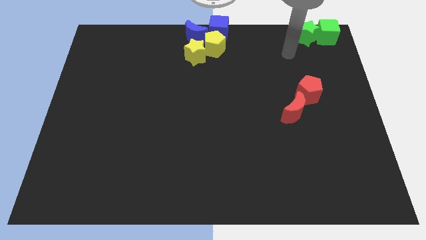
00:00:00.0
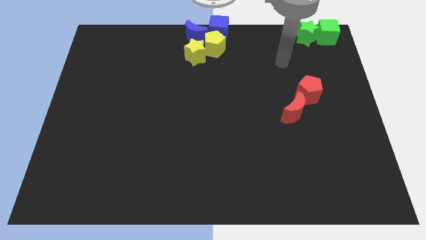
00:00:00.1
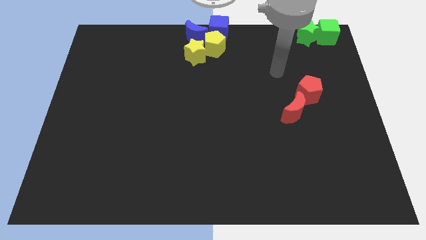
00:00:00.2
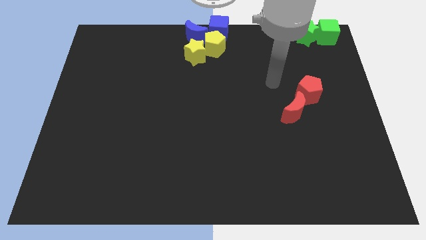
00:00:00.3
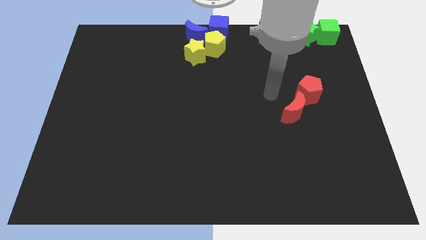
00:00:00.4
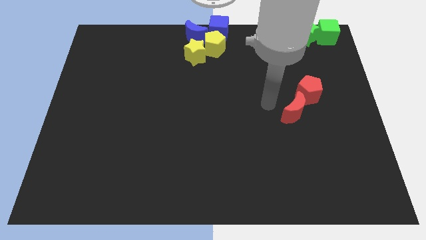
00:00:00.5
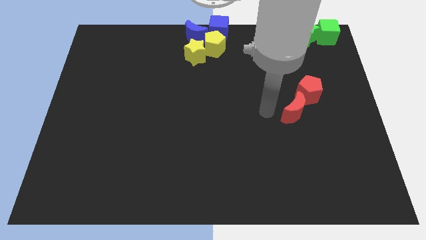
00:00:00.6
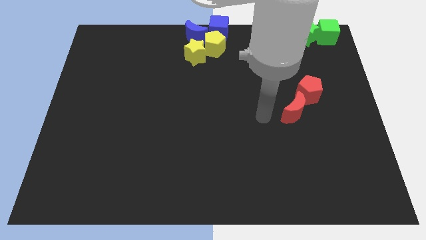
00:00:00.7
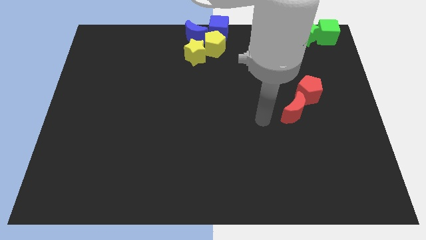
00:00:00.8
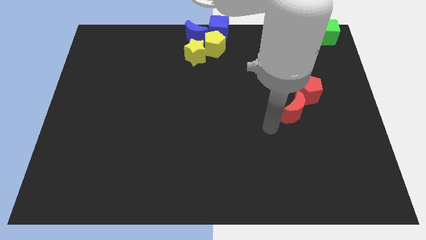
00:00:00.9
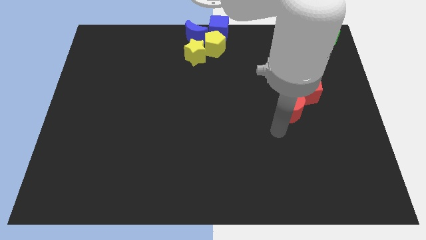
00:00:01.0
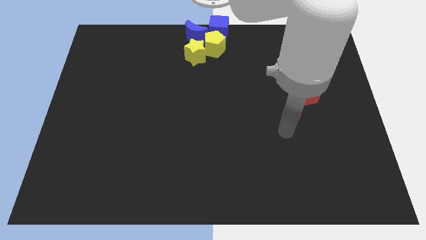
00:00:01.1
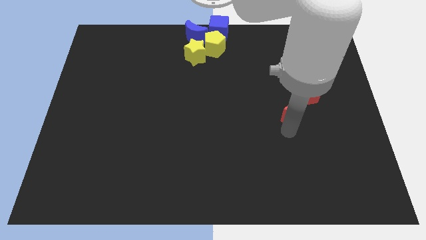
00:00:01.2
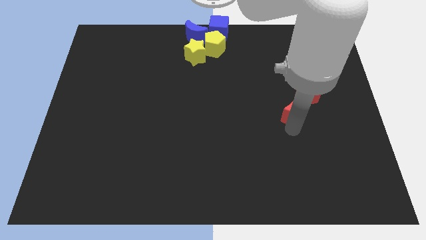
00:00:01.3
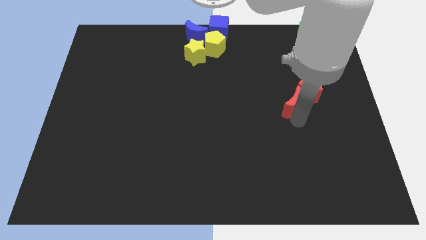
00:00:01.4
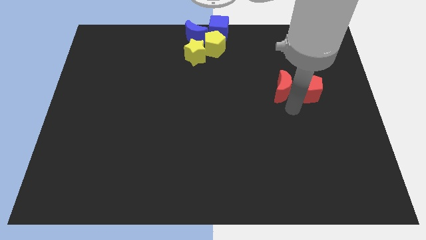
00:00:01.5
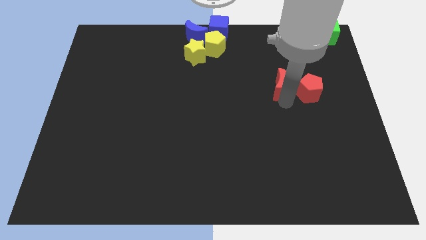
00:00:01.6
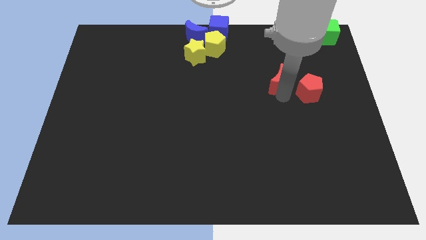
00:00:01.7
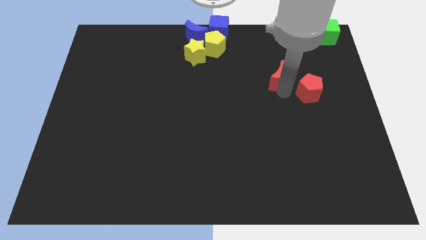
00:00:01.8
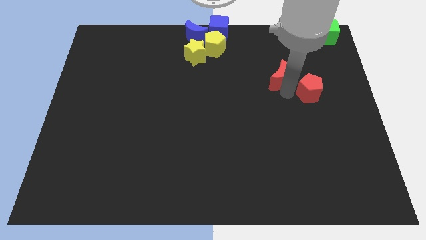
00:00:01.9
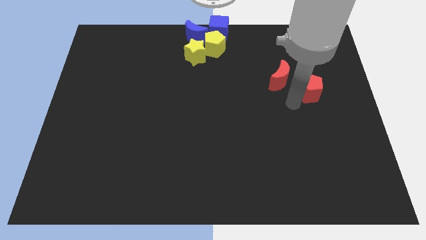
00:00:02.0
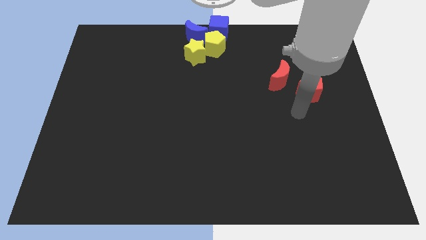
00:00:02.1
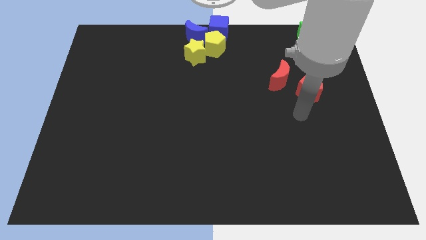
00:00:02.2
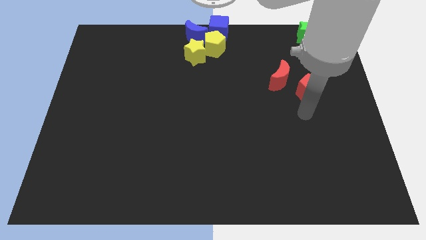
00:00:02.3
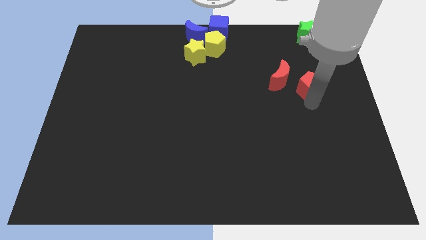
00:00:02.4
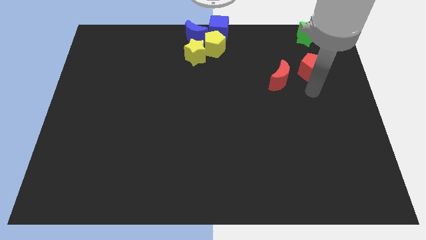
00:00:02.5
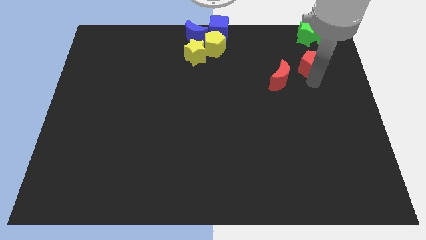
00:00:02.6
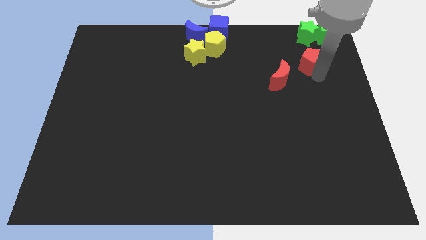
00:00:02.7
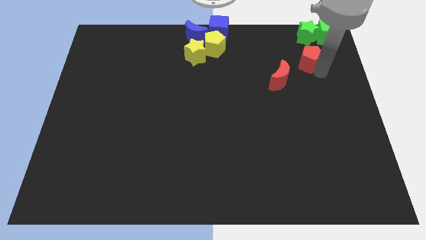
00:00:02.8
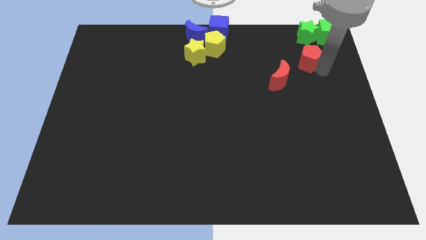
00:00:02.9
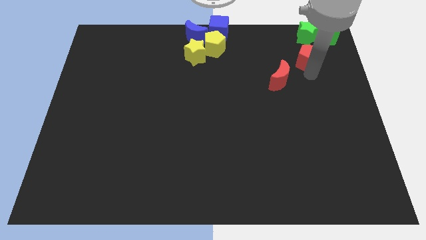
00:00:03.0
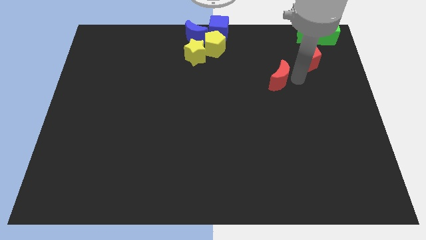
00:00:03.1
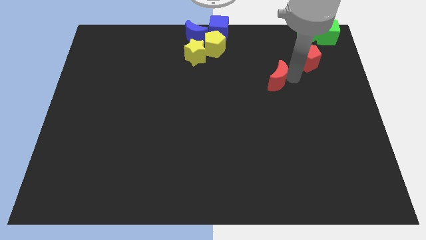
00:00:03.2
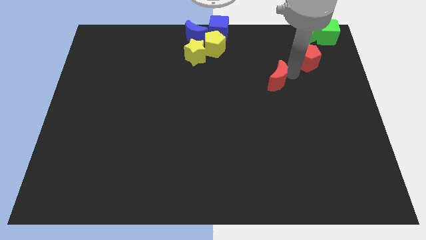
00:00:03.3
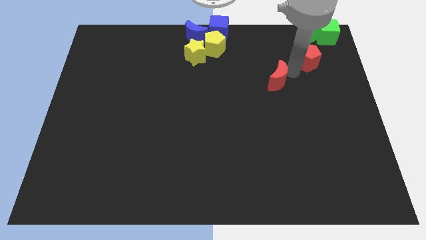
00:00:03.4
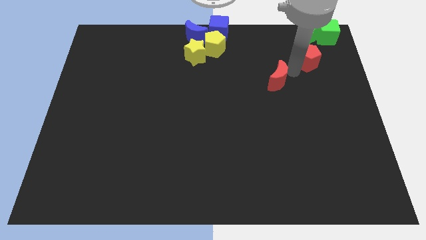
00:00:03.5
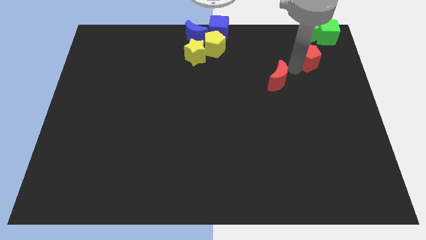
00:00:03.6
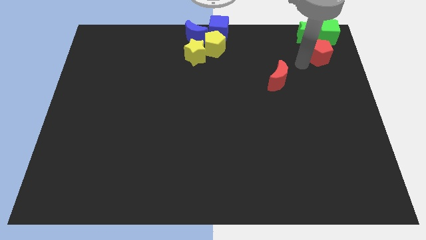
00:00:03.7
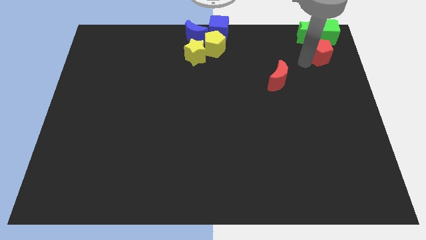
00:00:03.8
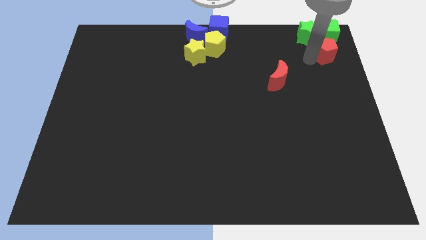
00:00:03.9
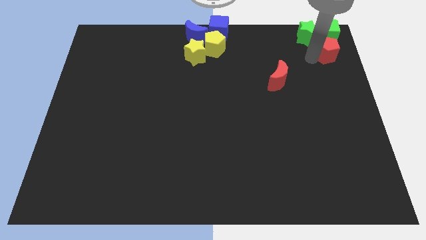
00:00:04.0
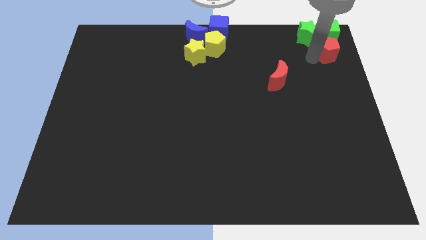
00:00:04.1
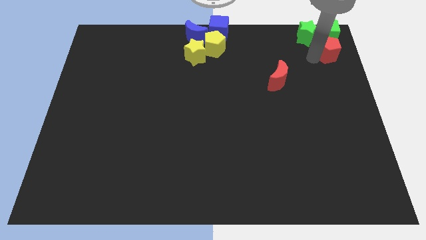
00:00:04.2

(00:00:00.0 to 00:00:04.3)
place the red pentagon below the green cube

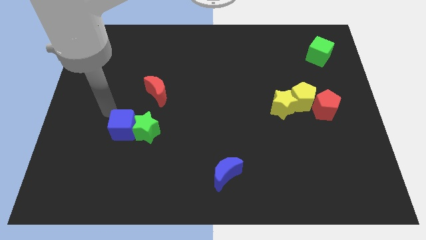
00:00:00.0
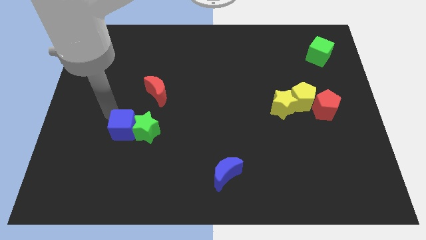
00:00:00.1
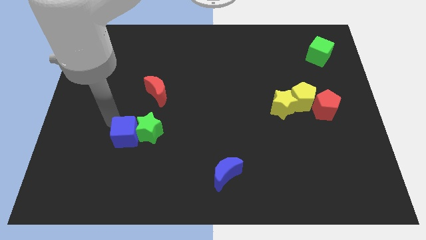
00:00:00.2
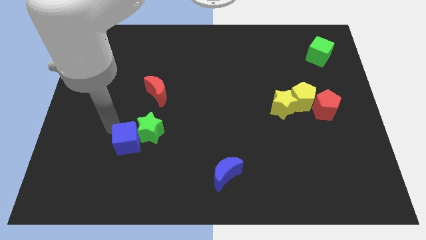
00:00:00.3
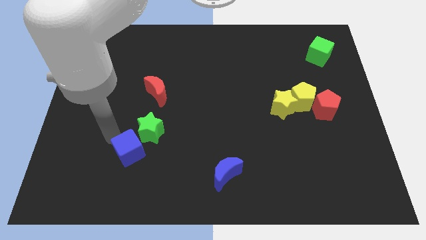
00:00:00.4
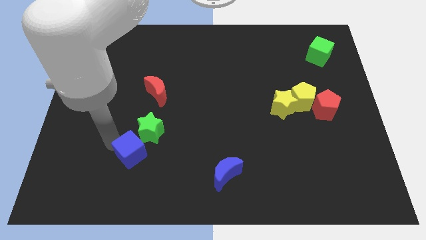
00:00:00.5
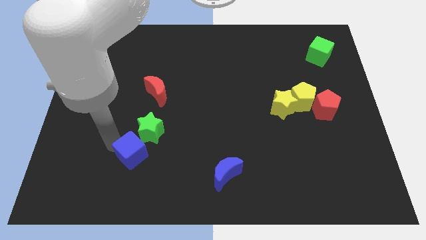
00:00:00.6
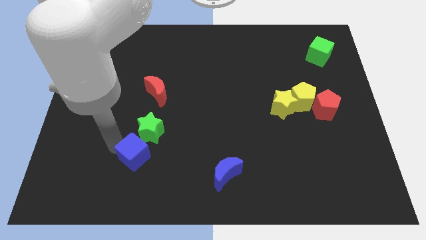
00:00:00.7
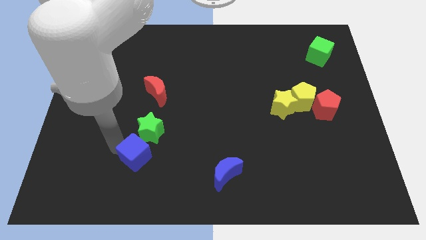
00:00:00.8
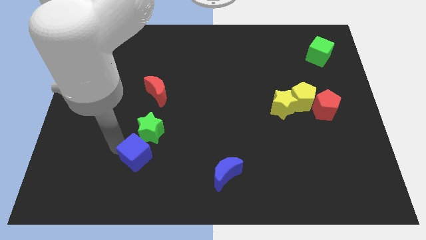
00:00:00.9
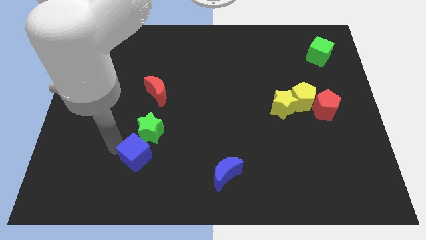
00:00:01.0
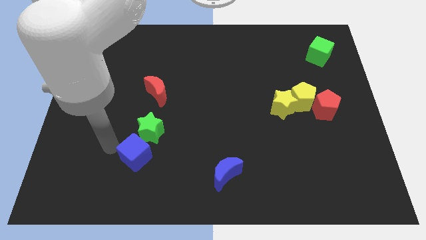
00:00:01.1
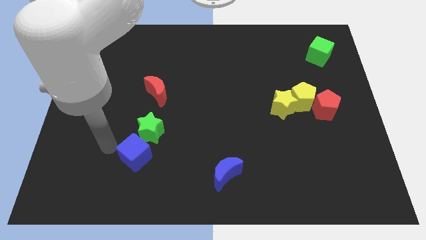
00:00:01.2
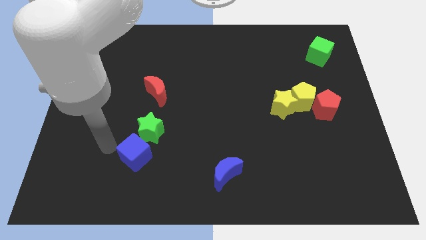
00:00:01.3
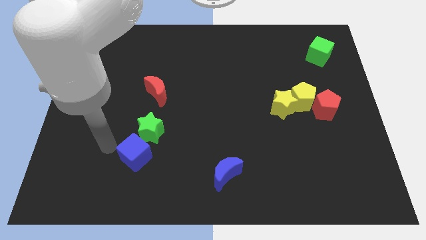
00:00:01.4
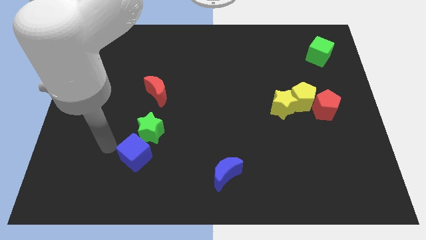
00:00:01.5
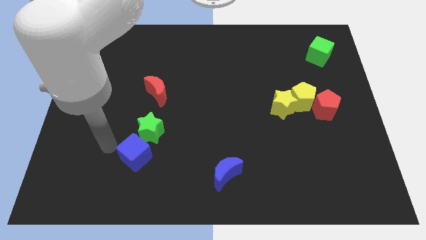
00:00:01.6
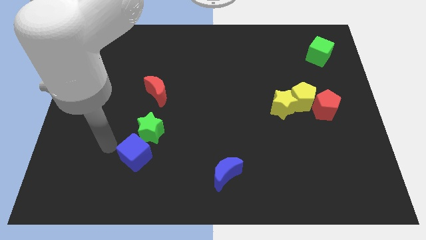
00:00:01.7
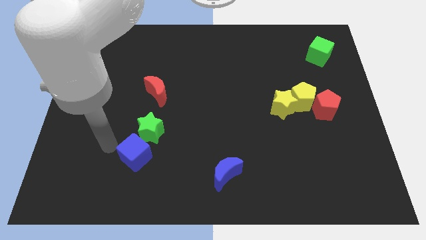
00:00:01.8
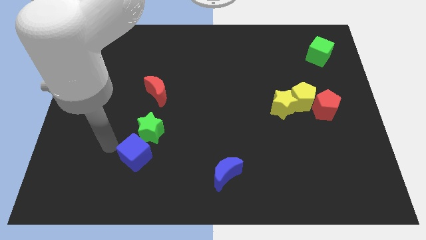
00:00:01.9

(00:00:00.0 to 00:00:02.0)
separate blue cube from the green star

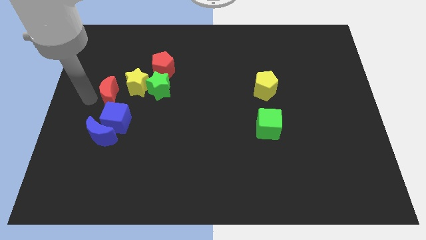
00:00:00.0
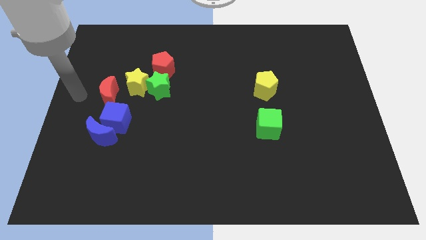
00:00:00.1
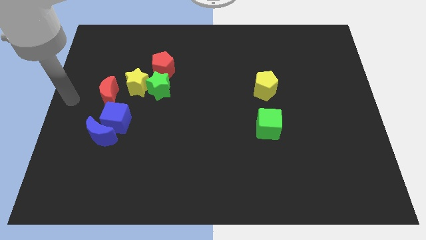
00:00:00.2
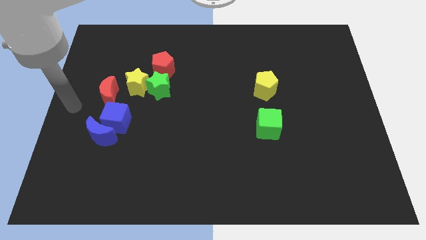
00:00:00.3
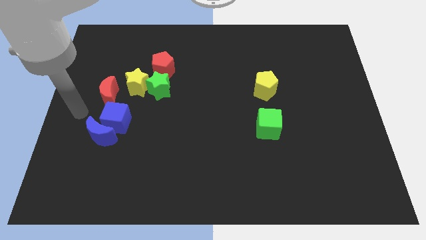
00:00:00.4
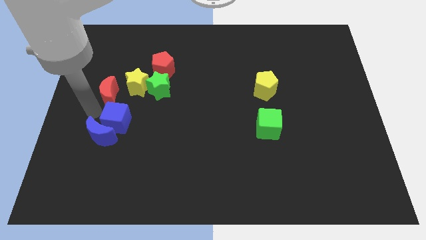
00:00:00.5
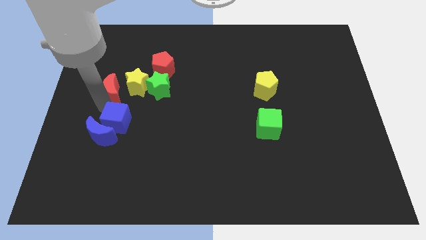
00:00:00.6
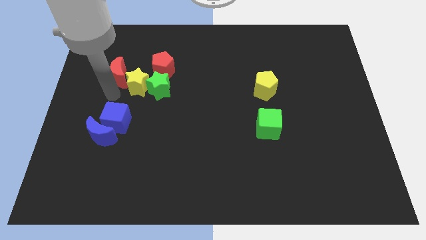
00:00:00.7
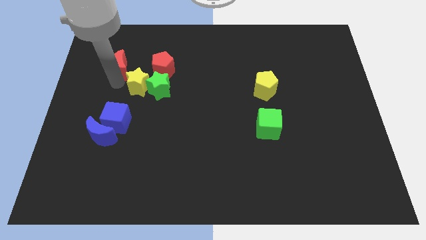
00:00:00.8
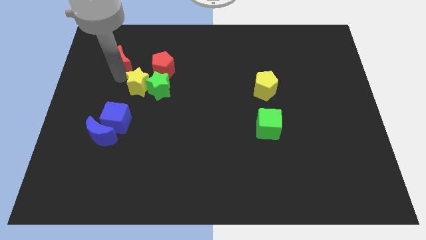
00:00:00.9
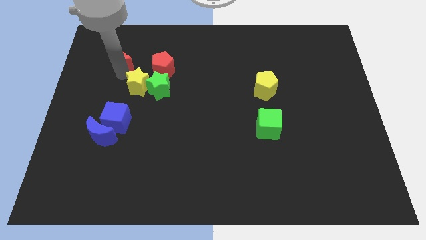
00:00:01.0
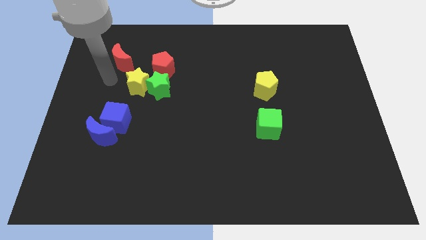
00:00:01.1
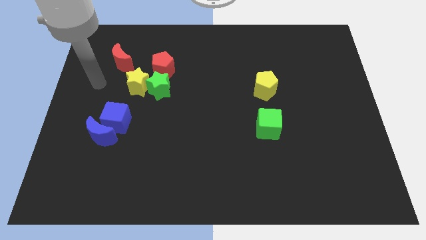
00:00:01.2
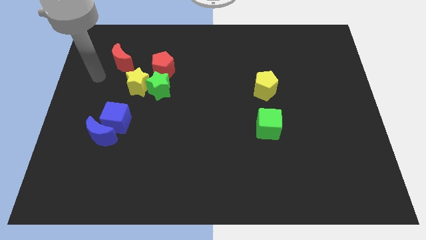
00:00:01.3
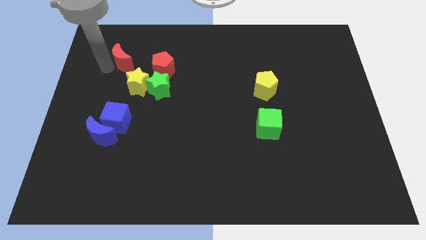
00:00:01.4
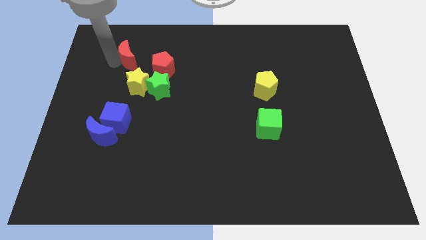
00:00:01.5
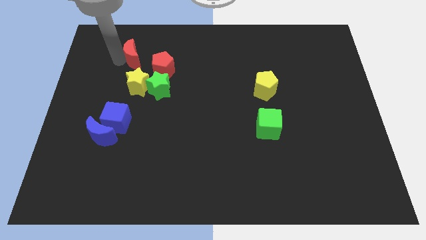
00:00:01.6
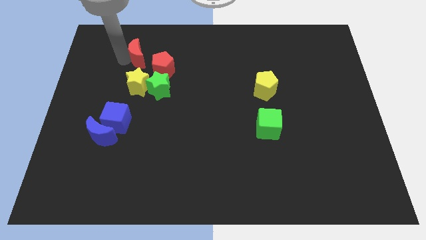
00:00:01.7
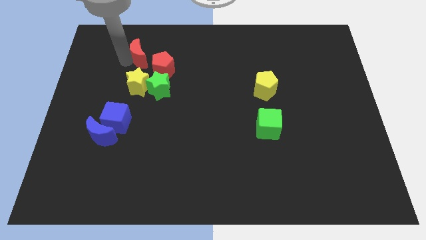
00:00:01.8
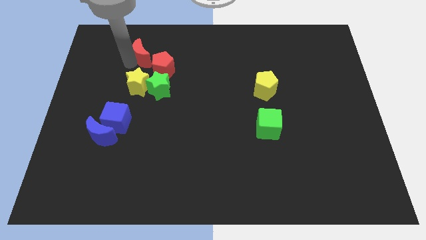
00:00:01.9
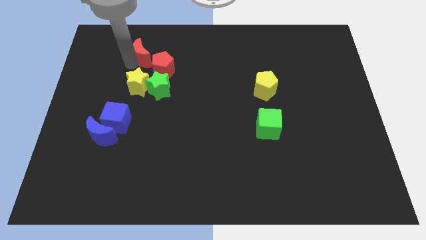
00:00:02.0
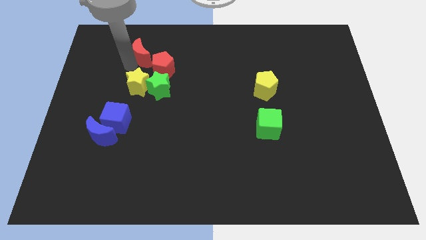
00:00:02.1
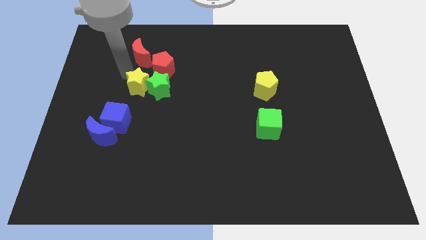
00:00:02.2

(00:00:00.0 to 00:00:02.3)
place the red moon to the left side of red pentagon

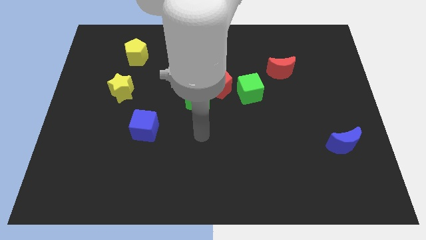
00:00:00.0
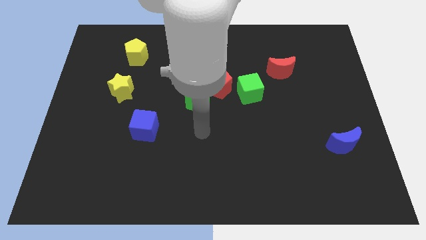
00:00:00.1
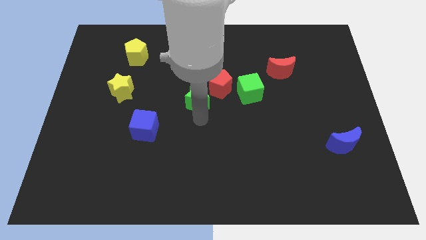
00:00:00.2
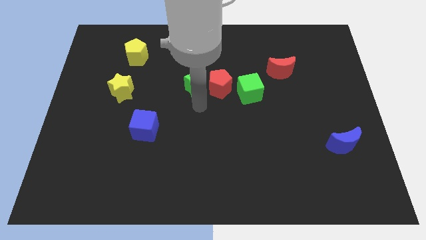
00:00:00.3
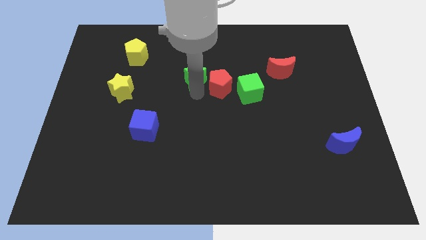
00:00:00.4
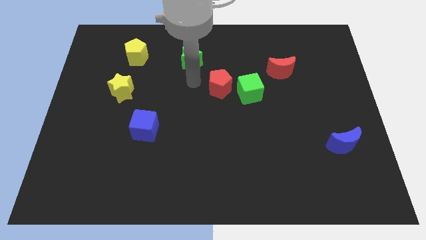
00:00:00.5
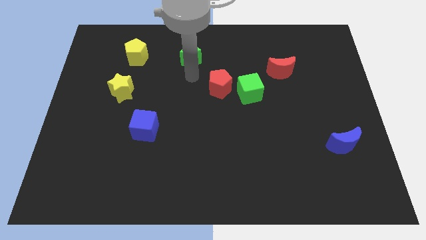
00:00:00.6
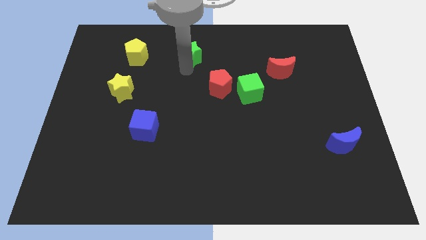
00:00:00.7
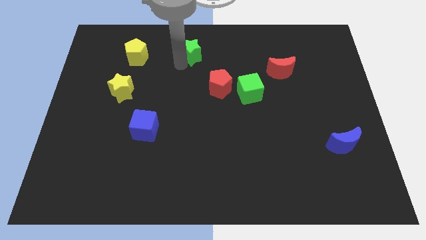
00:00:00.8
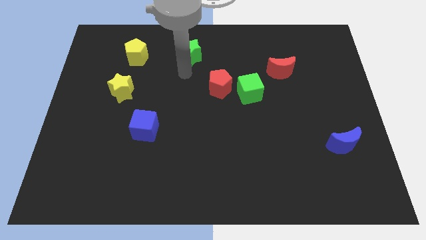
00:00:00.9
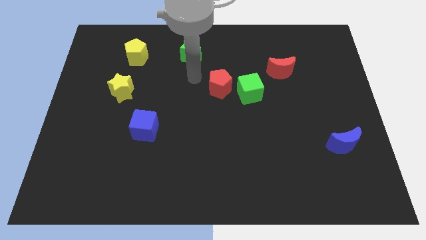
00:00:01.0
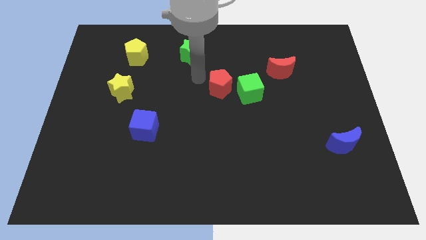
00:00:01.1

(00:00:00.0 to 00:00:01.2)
push the green star to the right side of the yellow pentagon
